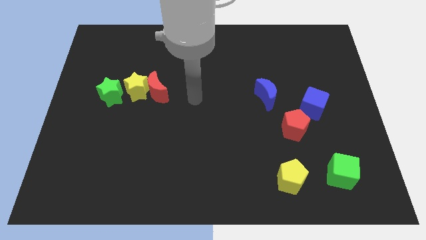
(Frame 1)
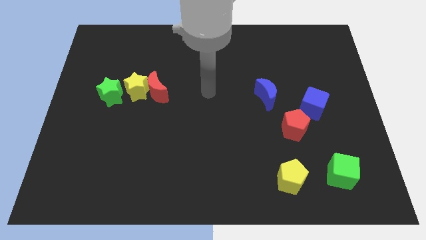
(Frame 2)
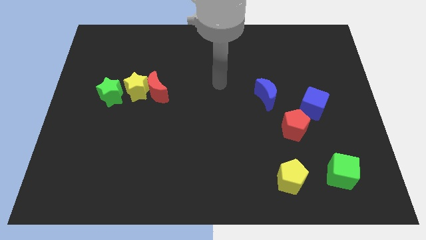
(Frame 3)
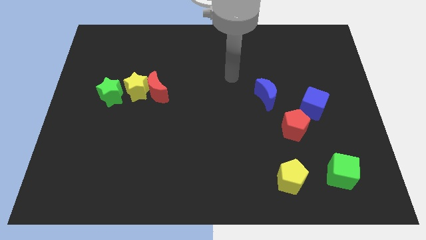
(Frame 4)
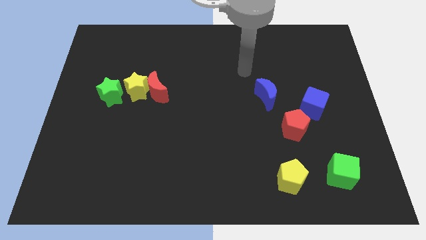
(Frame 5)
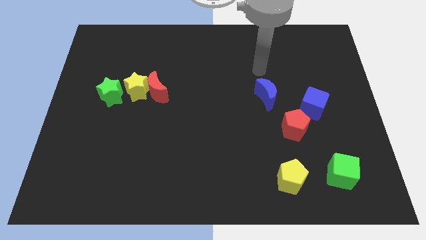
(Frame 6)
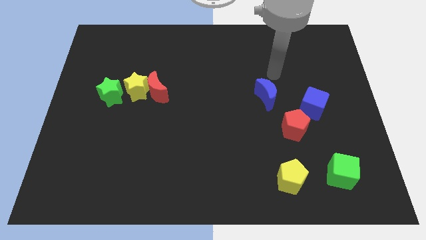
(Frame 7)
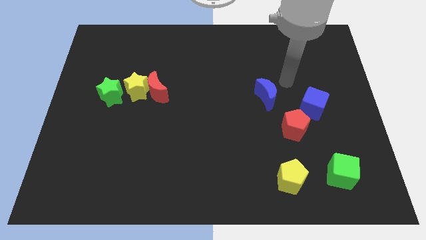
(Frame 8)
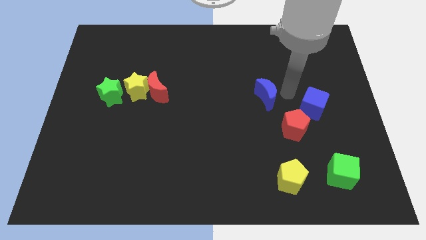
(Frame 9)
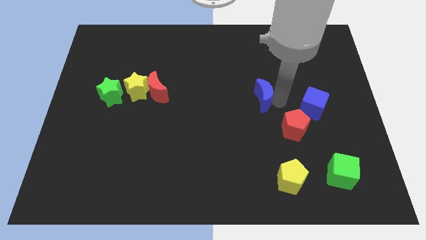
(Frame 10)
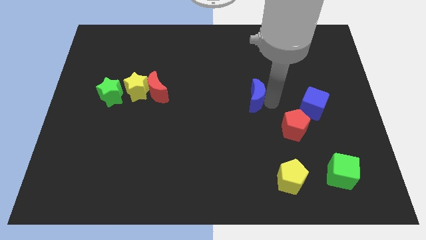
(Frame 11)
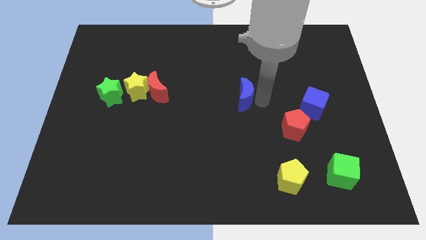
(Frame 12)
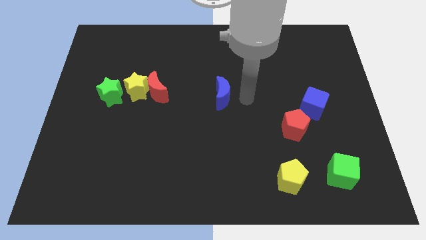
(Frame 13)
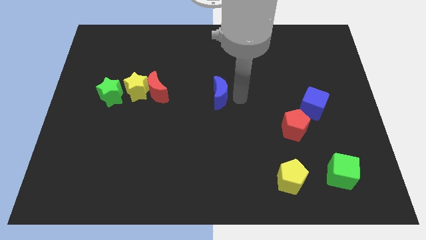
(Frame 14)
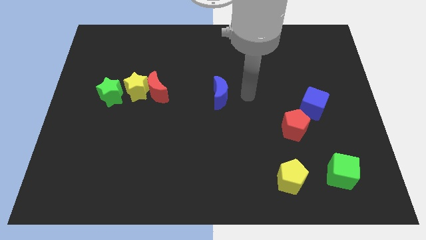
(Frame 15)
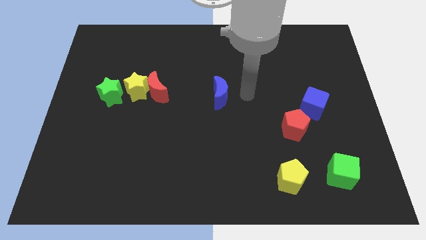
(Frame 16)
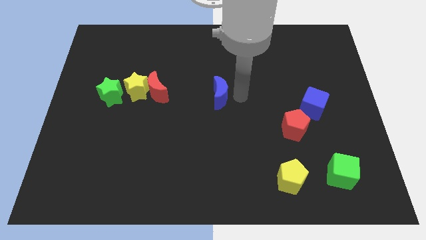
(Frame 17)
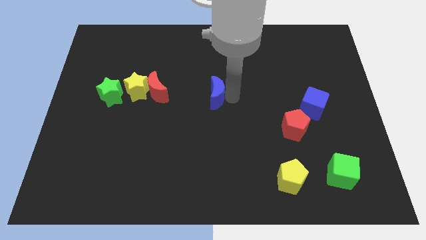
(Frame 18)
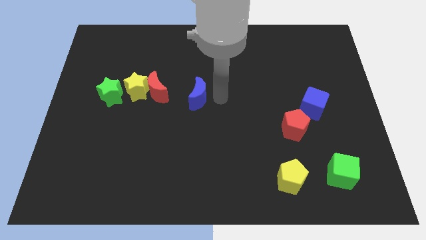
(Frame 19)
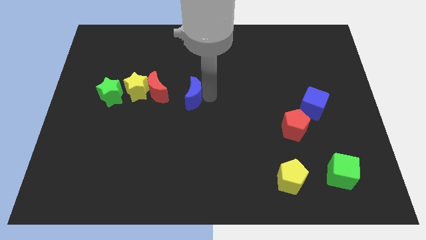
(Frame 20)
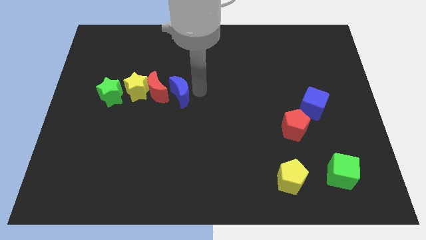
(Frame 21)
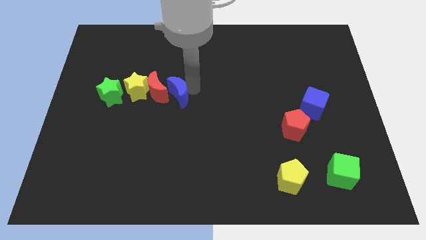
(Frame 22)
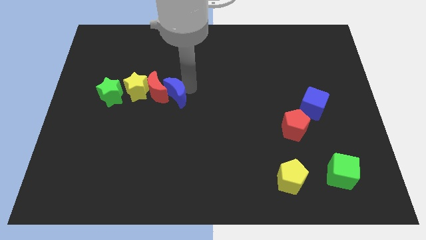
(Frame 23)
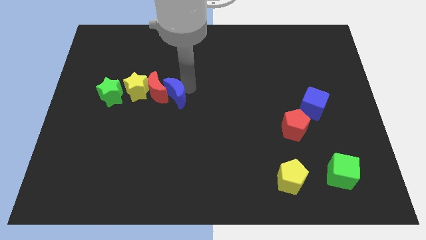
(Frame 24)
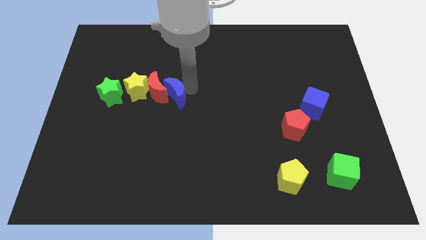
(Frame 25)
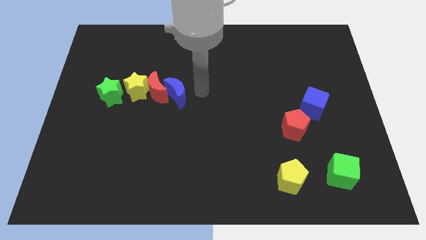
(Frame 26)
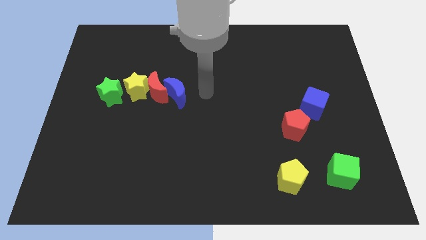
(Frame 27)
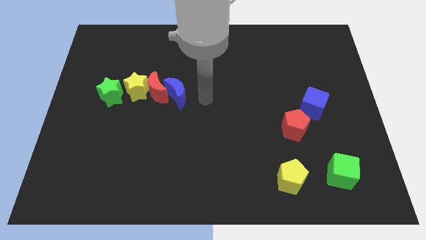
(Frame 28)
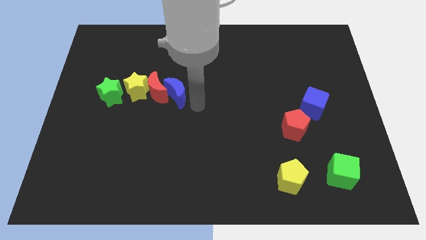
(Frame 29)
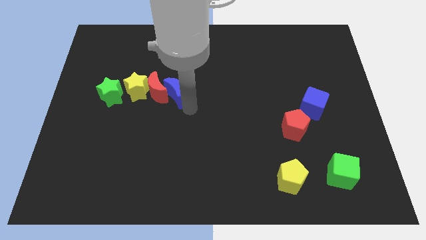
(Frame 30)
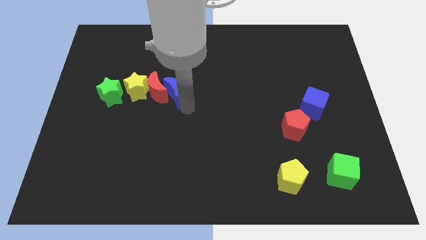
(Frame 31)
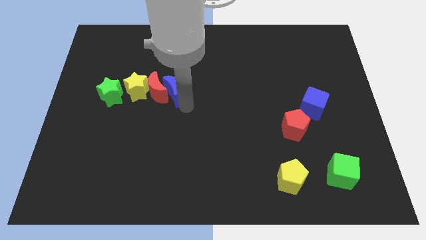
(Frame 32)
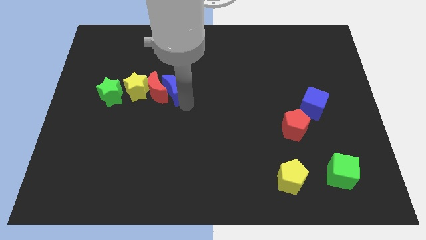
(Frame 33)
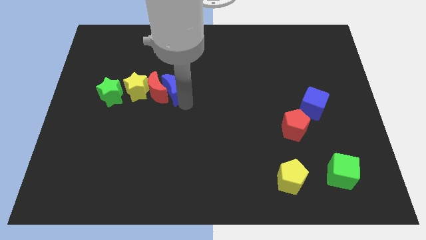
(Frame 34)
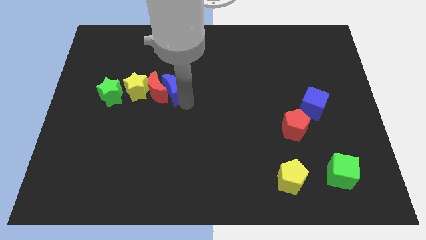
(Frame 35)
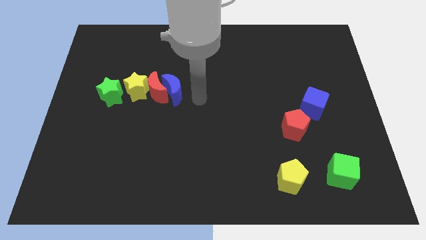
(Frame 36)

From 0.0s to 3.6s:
move blue crescent to the right of red crescent

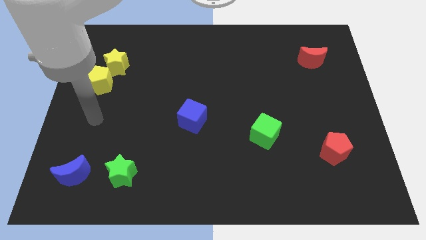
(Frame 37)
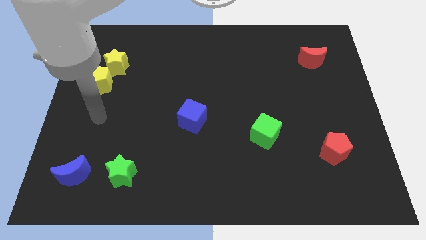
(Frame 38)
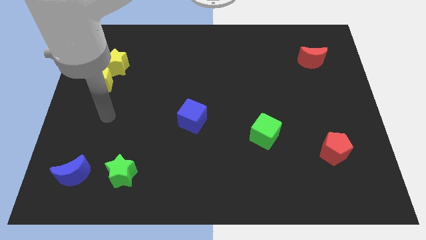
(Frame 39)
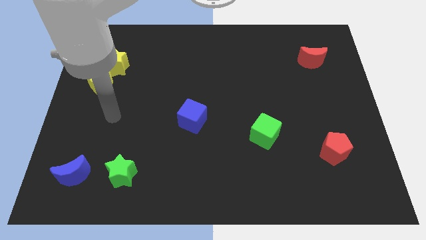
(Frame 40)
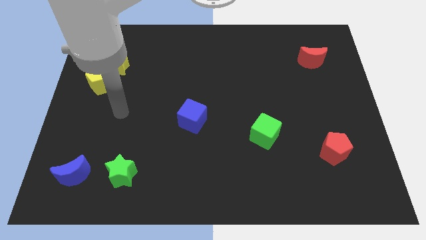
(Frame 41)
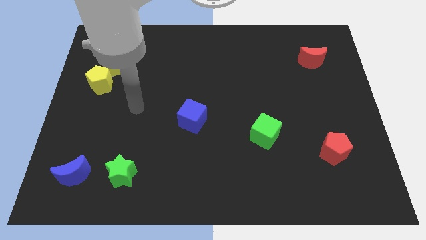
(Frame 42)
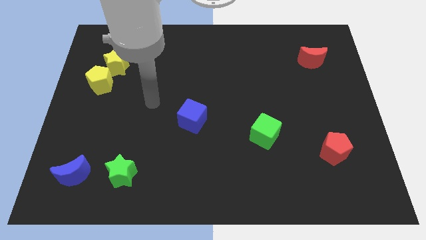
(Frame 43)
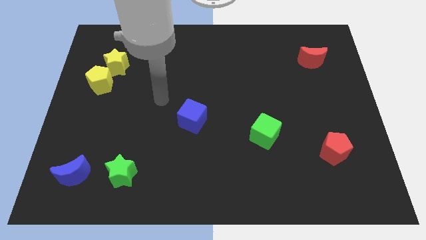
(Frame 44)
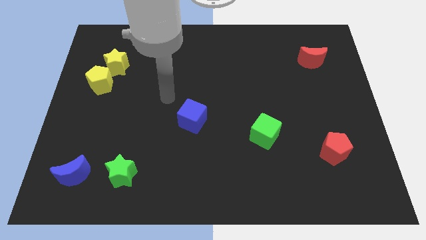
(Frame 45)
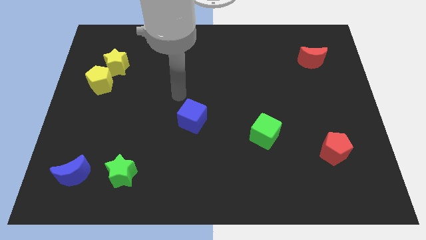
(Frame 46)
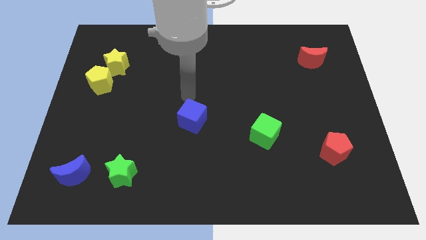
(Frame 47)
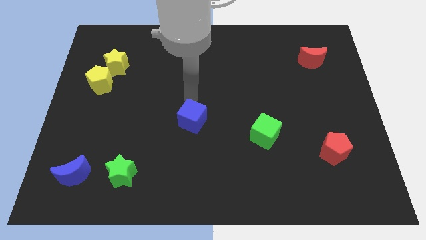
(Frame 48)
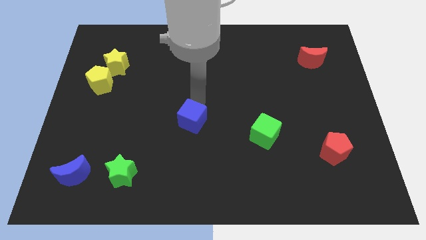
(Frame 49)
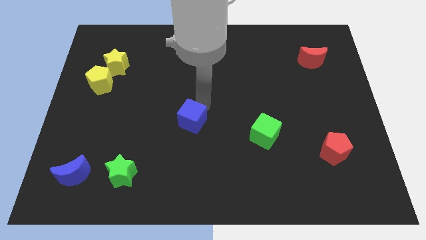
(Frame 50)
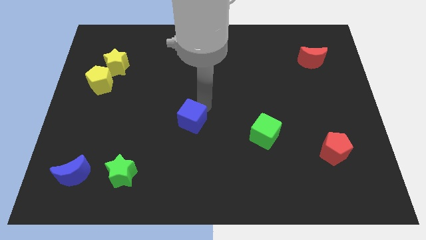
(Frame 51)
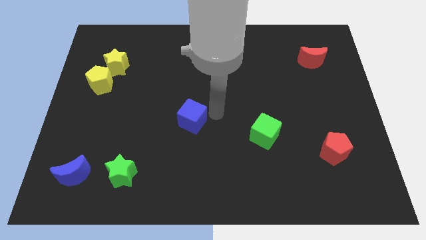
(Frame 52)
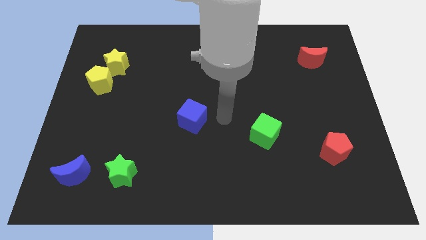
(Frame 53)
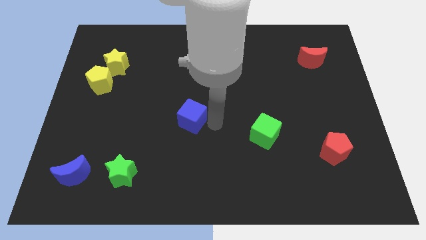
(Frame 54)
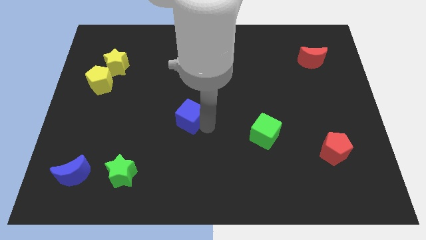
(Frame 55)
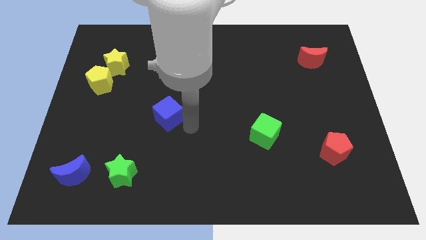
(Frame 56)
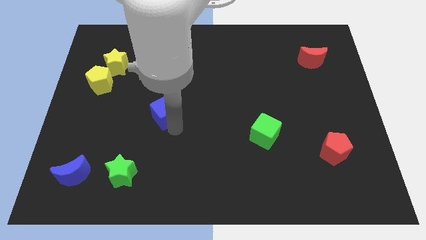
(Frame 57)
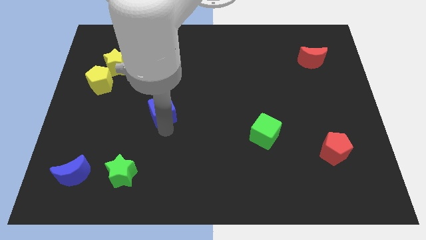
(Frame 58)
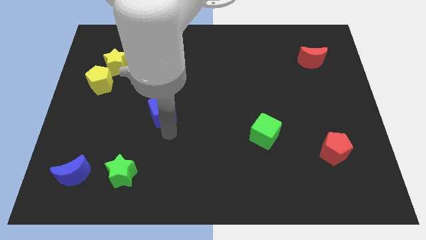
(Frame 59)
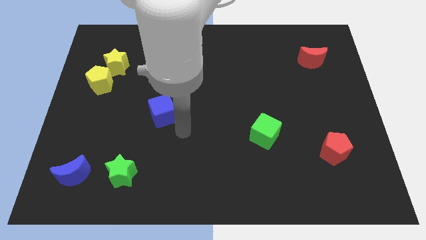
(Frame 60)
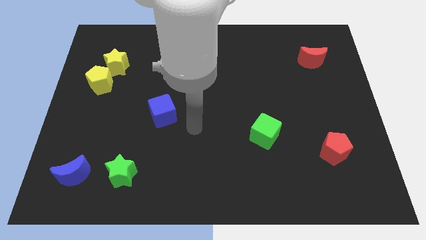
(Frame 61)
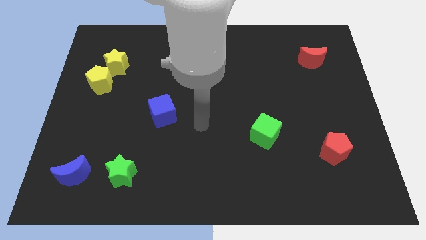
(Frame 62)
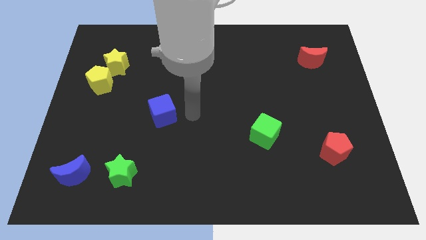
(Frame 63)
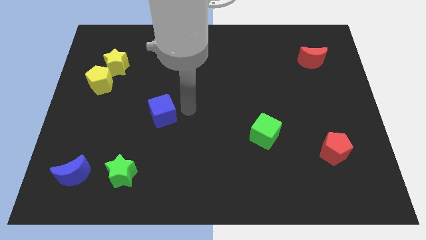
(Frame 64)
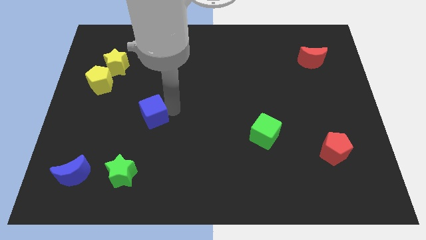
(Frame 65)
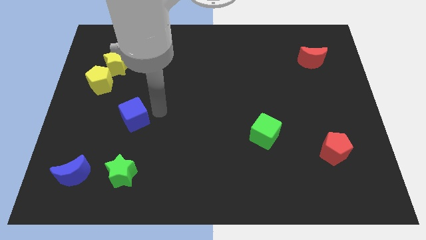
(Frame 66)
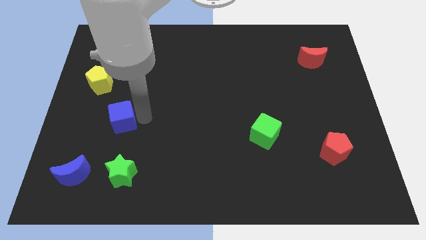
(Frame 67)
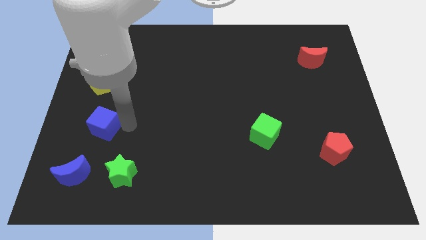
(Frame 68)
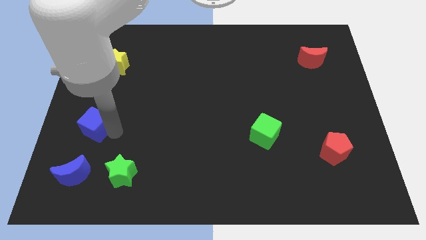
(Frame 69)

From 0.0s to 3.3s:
push the blue cube towards the left side of the board

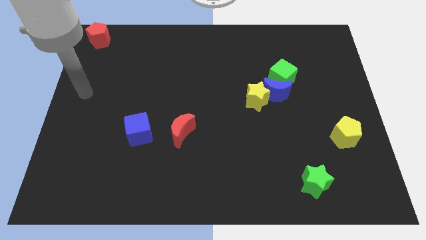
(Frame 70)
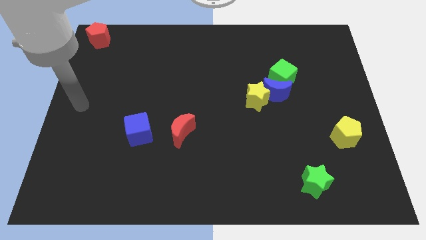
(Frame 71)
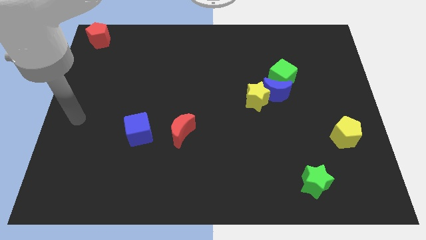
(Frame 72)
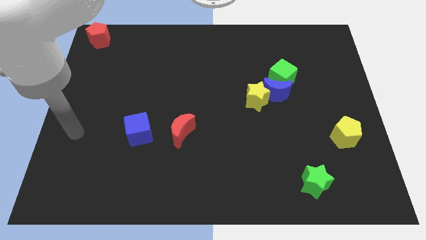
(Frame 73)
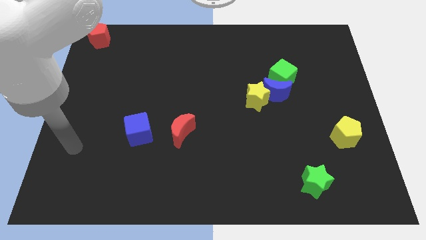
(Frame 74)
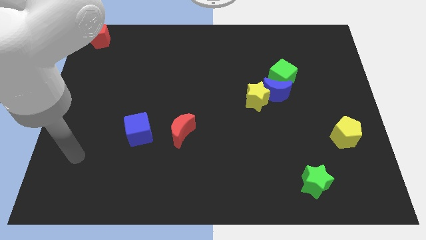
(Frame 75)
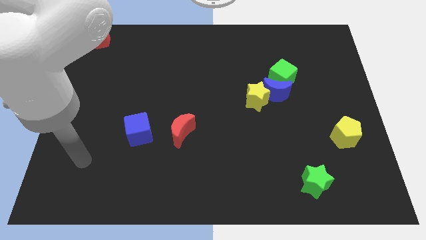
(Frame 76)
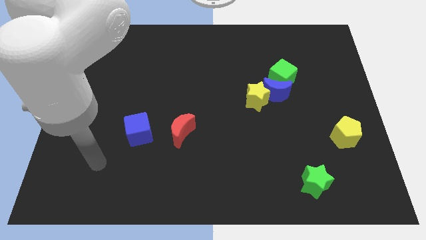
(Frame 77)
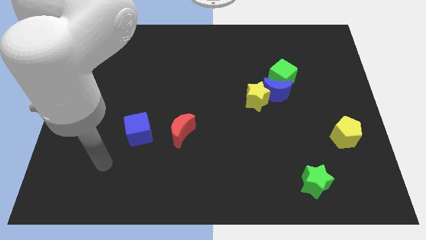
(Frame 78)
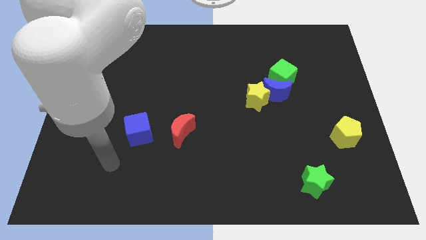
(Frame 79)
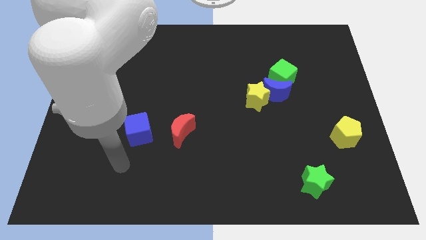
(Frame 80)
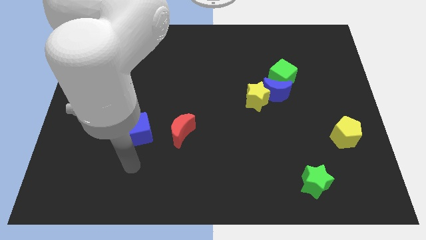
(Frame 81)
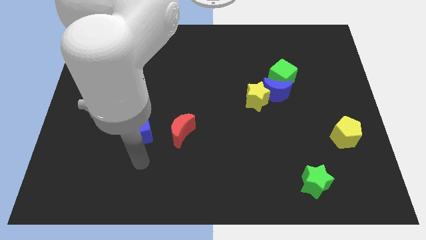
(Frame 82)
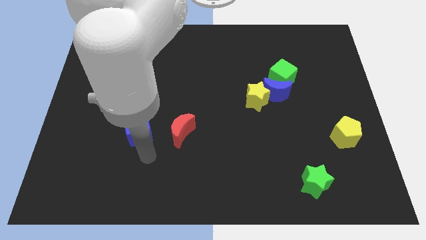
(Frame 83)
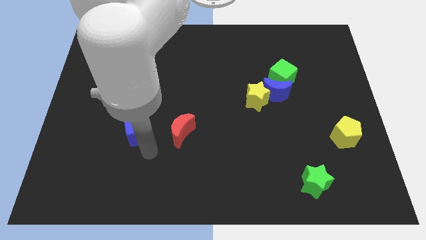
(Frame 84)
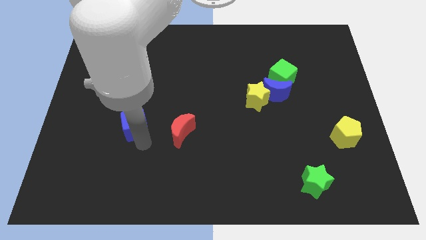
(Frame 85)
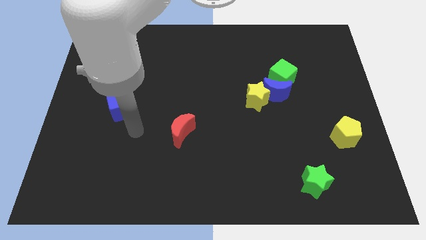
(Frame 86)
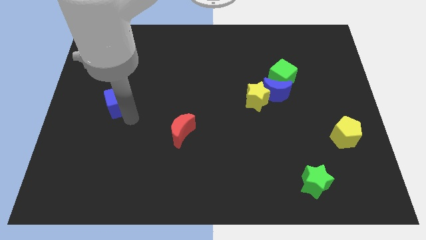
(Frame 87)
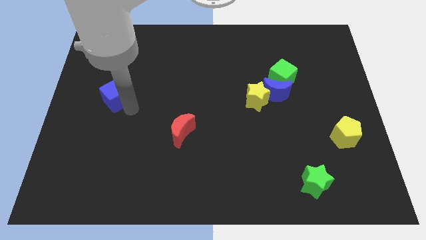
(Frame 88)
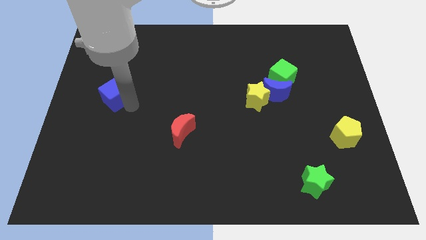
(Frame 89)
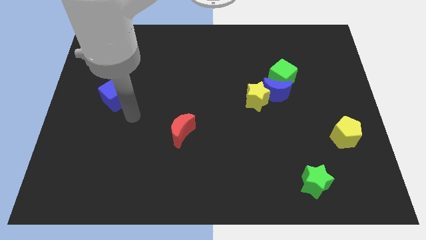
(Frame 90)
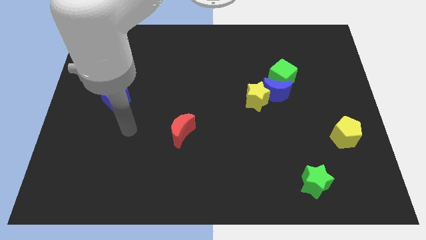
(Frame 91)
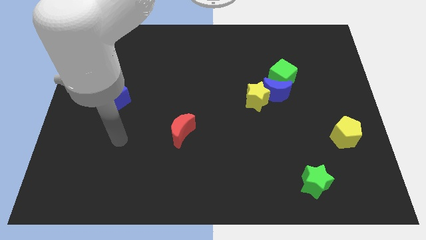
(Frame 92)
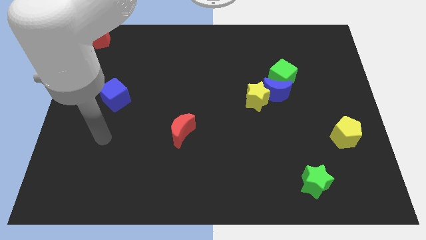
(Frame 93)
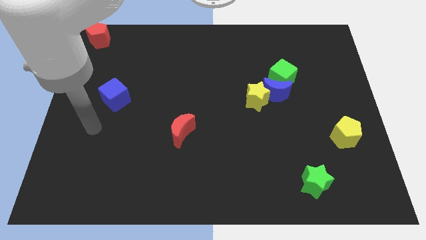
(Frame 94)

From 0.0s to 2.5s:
move blue cube towards red pentagon
